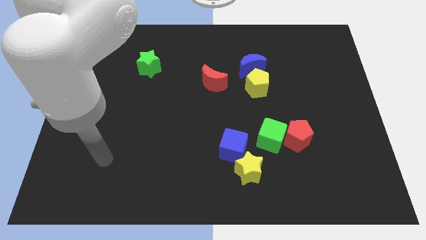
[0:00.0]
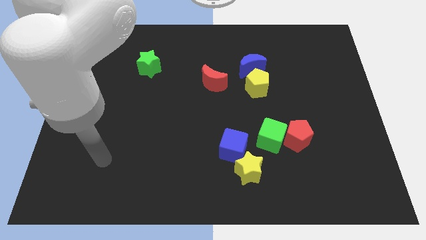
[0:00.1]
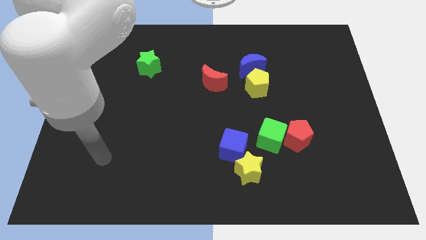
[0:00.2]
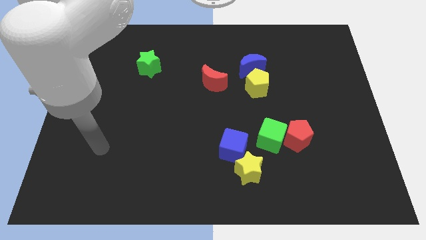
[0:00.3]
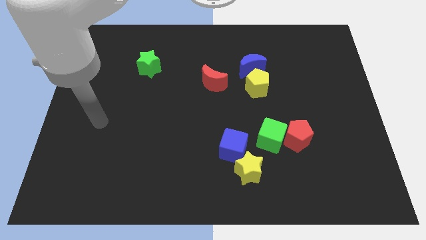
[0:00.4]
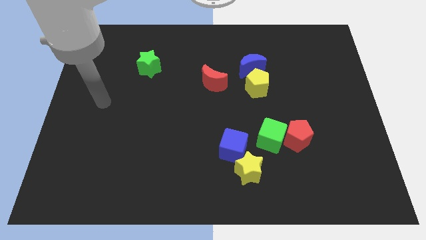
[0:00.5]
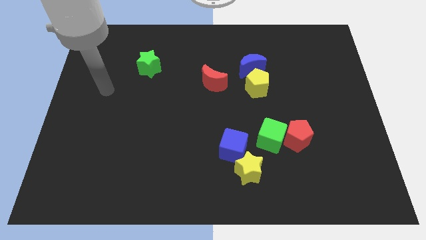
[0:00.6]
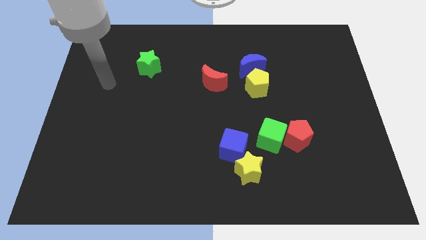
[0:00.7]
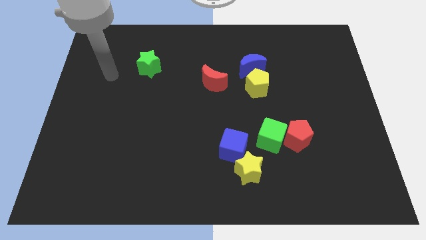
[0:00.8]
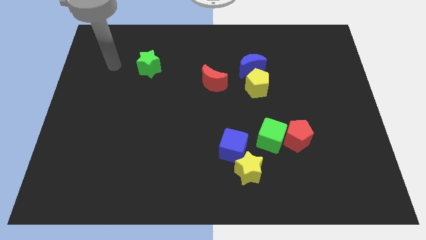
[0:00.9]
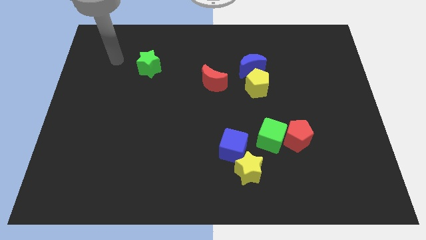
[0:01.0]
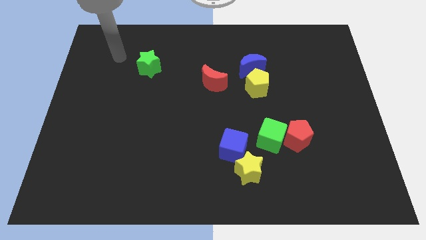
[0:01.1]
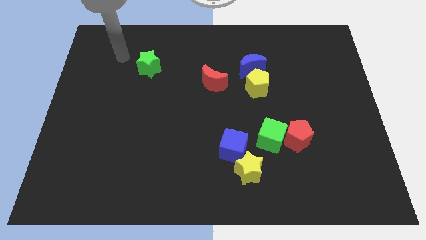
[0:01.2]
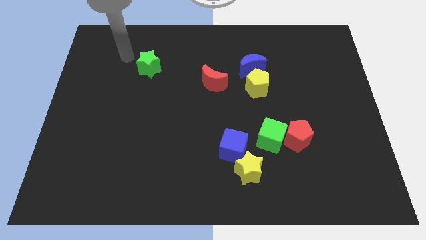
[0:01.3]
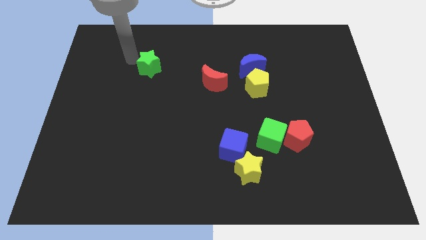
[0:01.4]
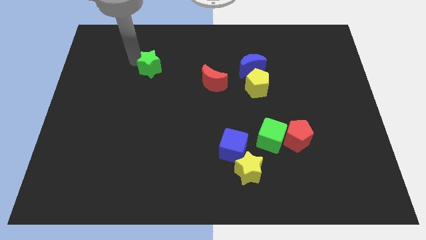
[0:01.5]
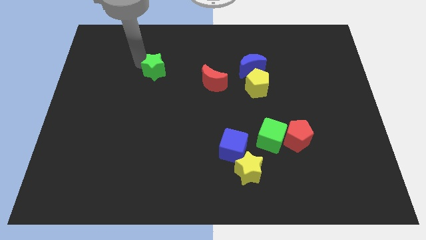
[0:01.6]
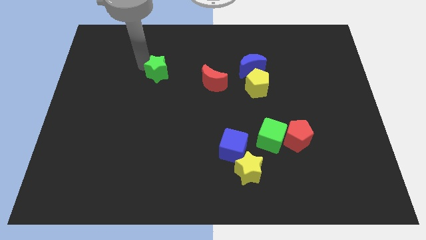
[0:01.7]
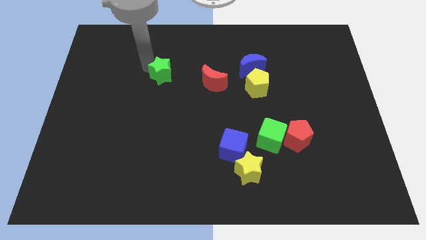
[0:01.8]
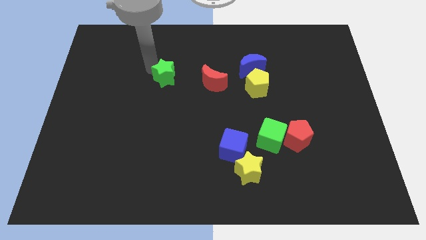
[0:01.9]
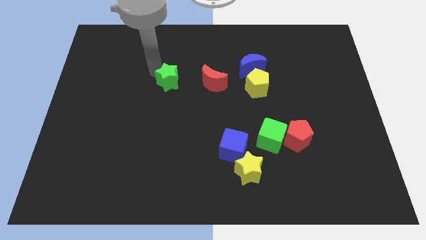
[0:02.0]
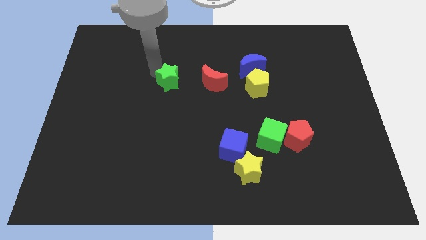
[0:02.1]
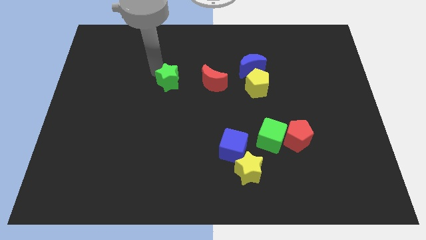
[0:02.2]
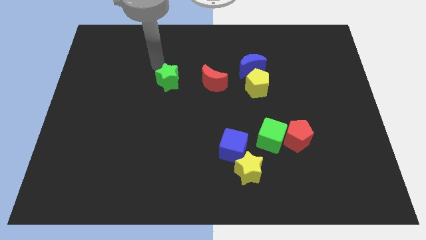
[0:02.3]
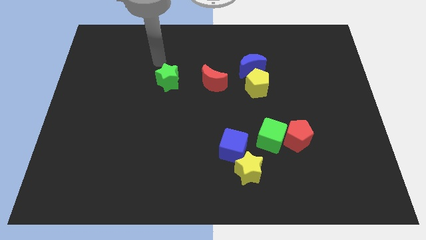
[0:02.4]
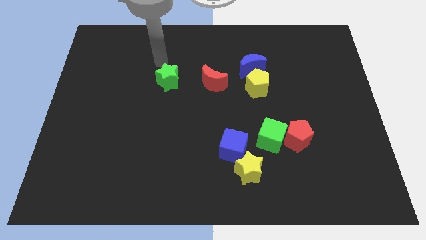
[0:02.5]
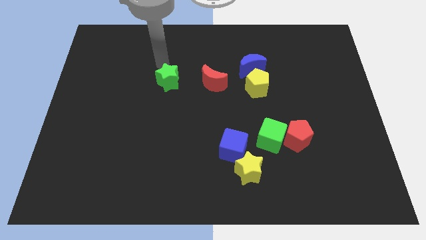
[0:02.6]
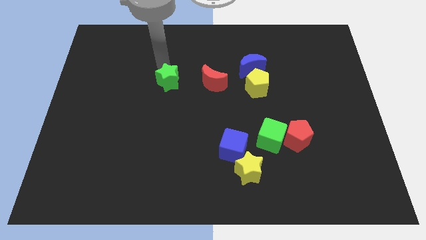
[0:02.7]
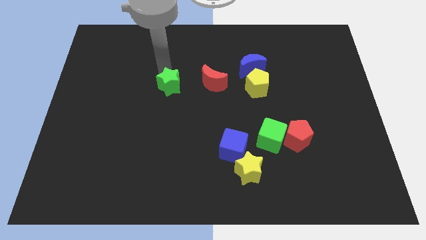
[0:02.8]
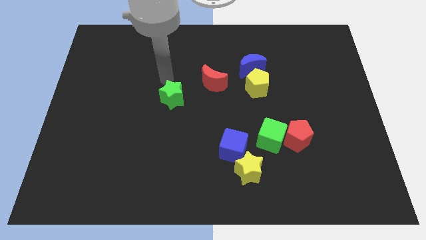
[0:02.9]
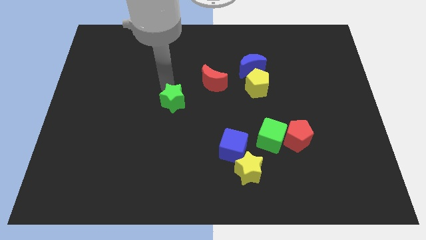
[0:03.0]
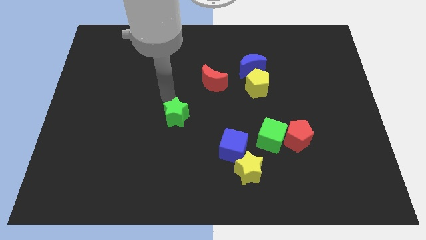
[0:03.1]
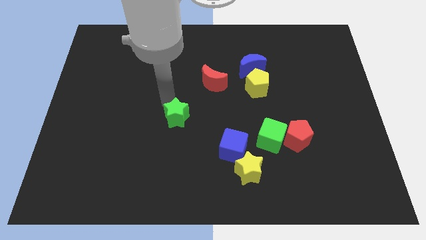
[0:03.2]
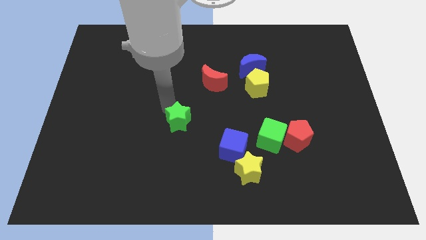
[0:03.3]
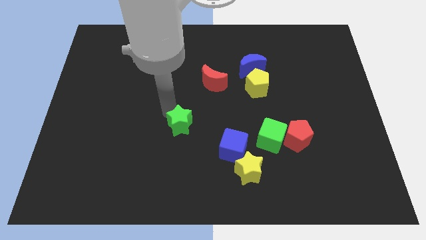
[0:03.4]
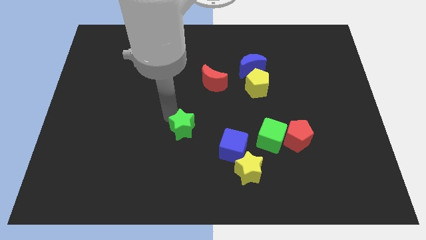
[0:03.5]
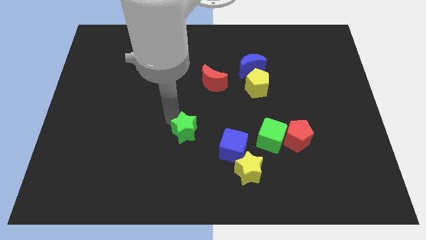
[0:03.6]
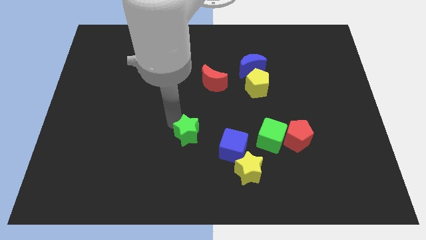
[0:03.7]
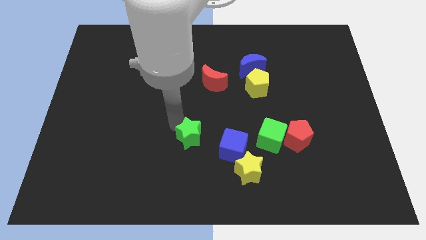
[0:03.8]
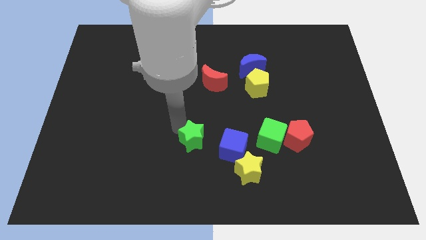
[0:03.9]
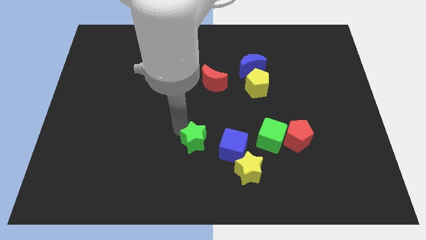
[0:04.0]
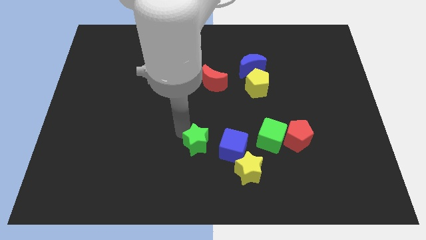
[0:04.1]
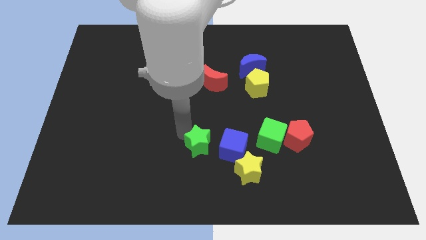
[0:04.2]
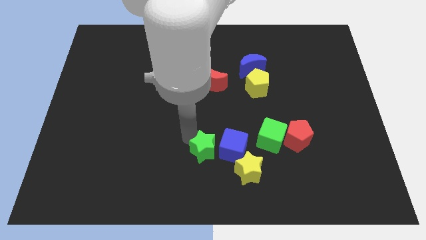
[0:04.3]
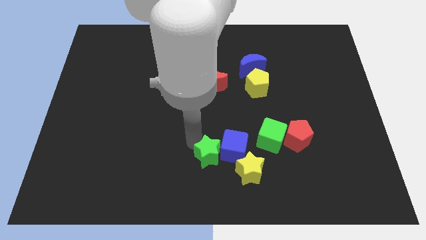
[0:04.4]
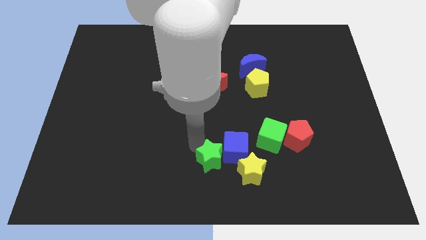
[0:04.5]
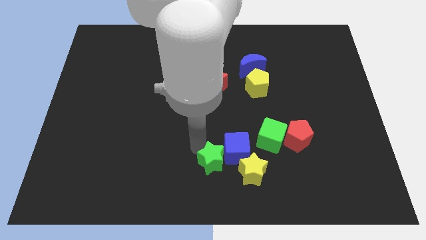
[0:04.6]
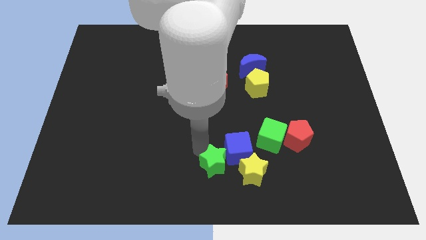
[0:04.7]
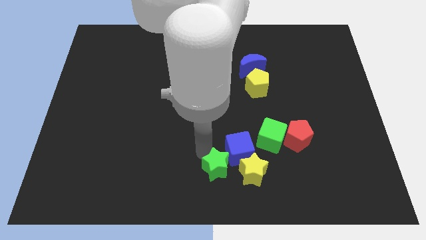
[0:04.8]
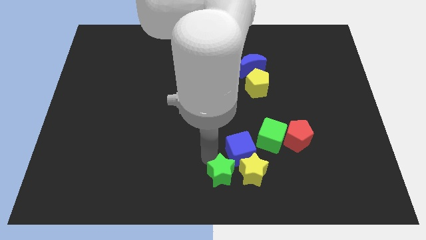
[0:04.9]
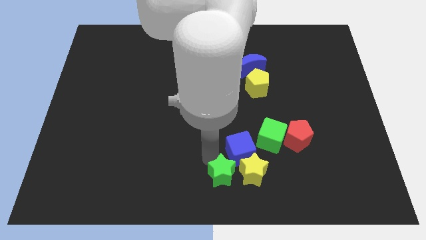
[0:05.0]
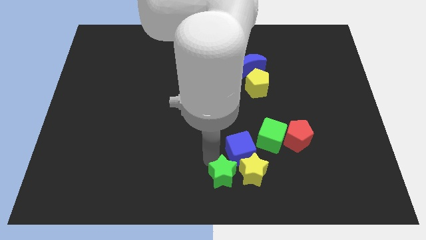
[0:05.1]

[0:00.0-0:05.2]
put the green star towards the yellow star

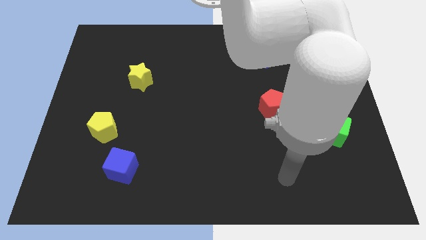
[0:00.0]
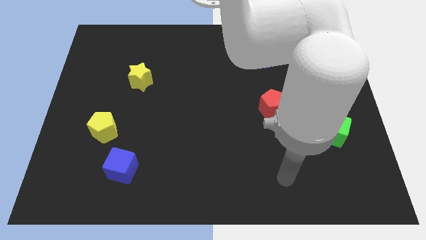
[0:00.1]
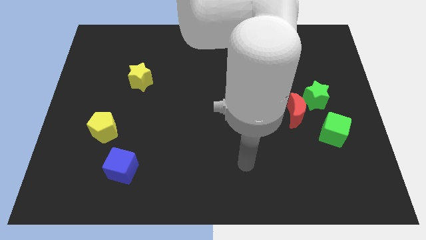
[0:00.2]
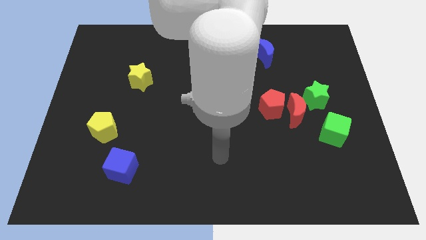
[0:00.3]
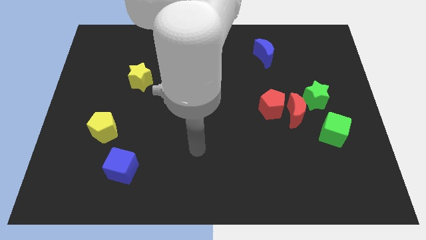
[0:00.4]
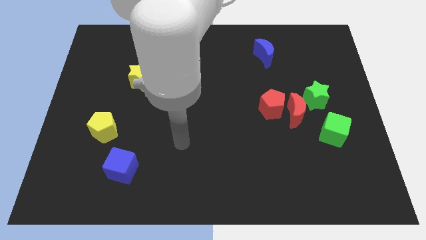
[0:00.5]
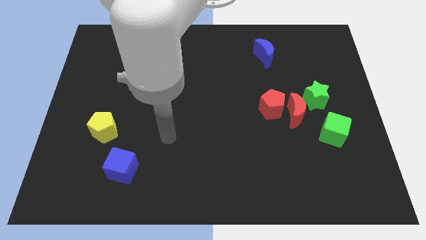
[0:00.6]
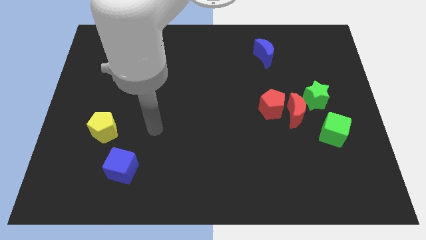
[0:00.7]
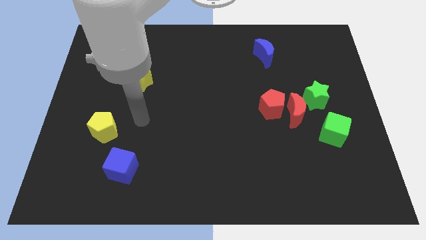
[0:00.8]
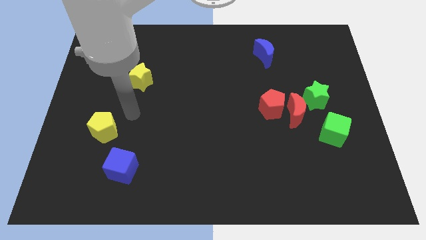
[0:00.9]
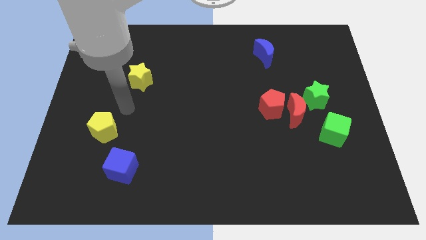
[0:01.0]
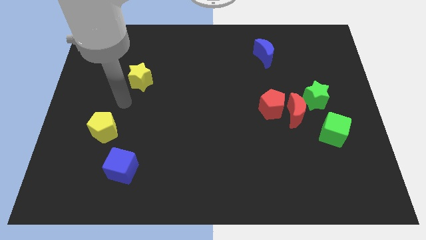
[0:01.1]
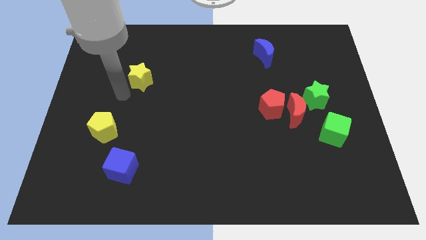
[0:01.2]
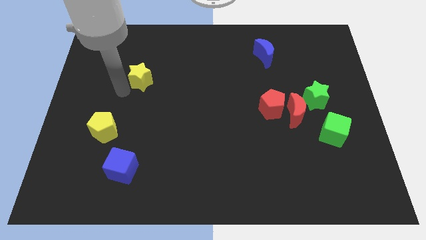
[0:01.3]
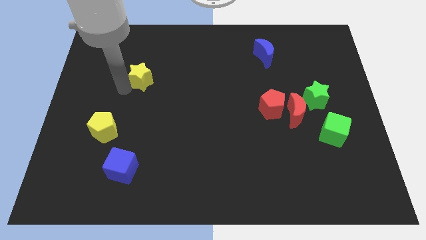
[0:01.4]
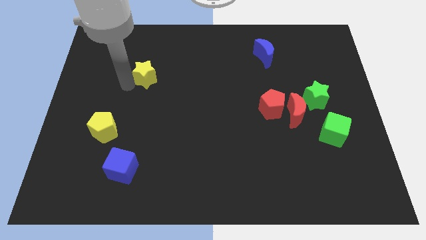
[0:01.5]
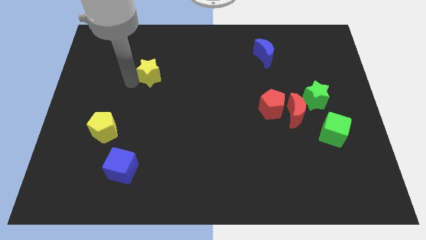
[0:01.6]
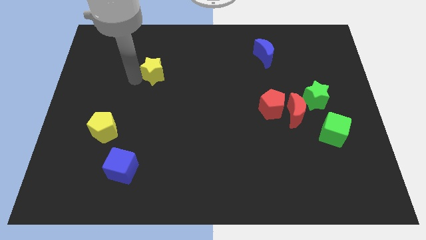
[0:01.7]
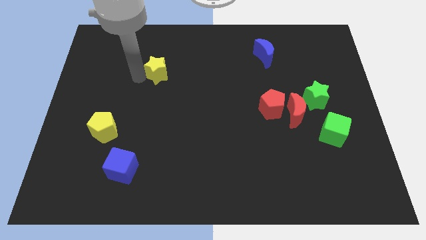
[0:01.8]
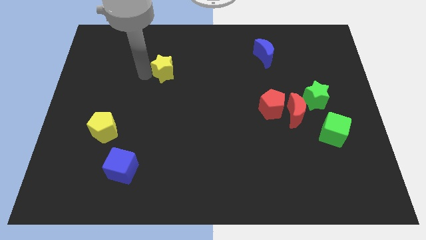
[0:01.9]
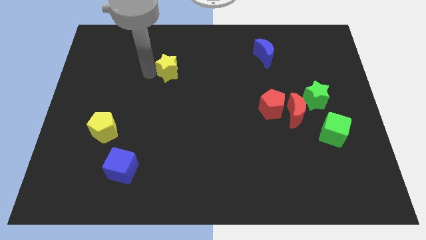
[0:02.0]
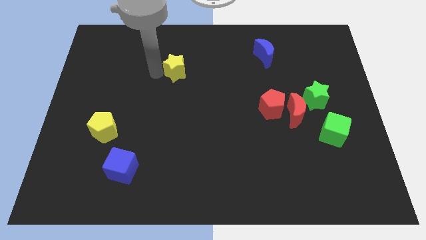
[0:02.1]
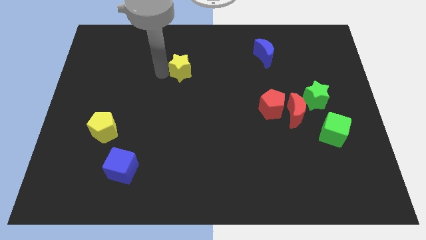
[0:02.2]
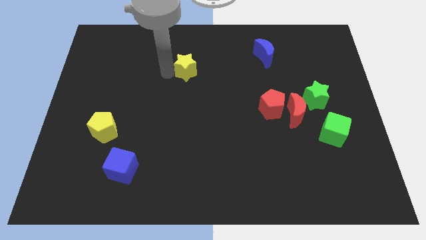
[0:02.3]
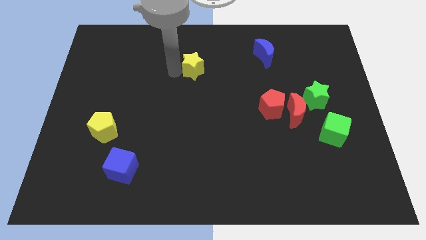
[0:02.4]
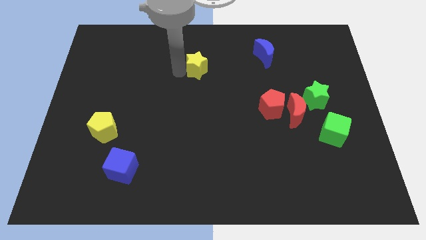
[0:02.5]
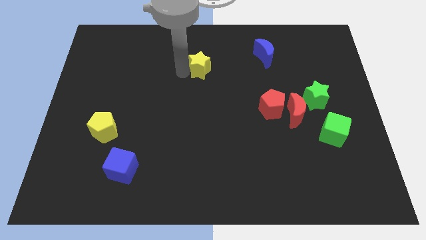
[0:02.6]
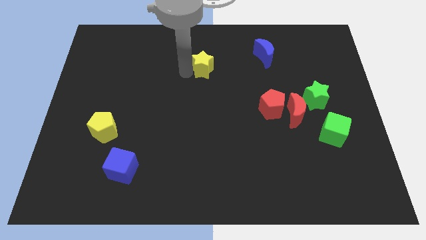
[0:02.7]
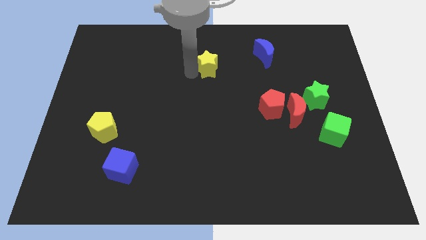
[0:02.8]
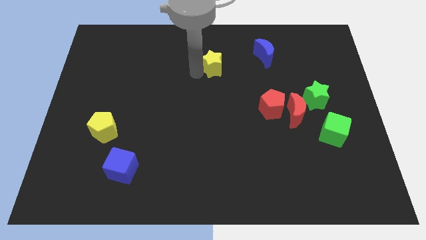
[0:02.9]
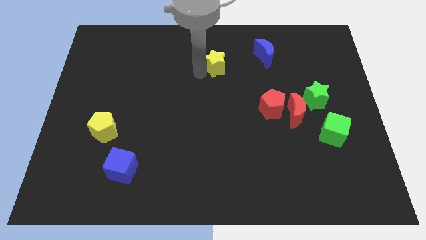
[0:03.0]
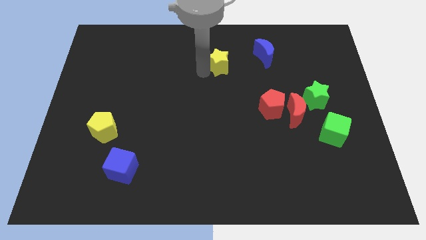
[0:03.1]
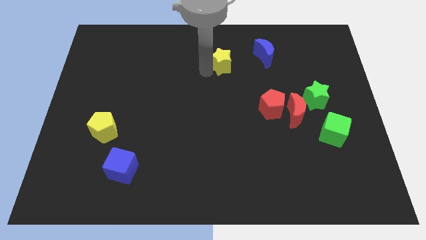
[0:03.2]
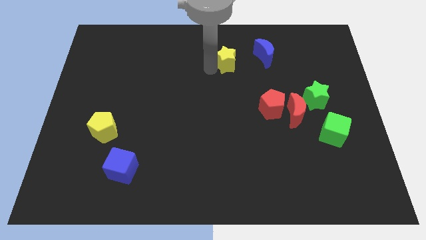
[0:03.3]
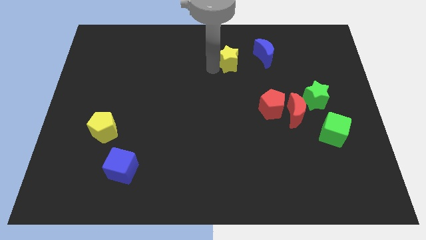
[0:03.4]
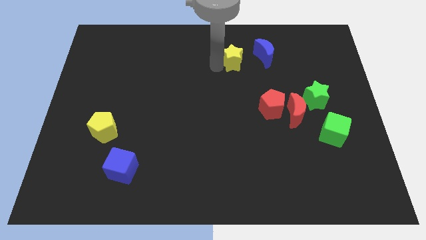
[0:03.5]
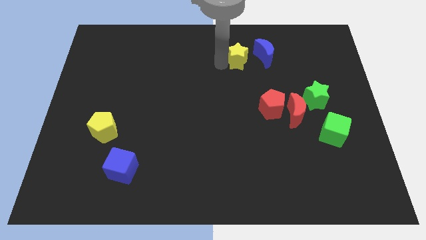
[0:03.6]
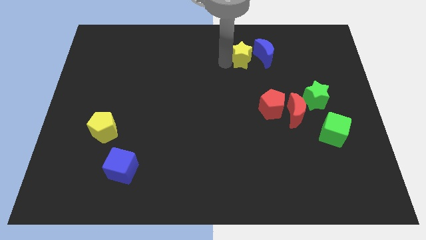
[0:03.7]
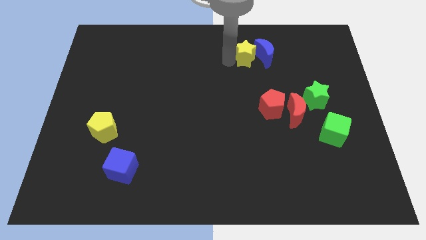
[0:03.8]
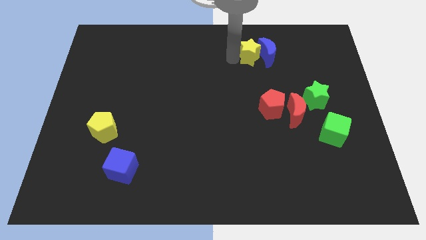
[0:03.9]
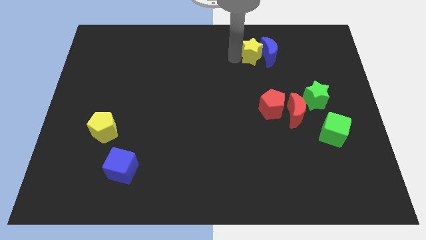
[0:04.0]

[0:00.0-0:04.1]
move the yellow star to the blue moon
